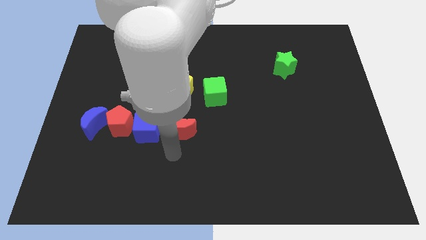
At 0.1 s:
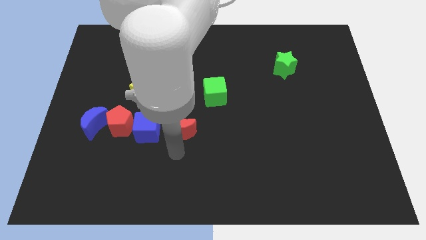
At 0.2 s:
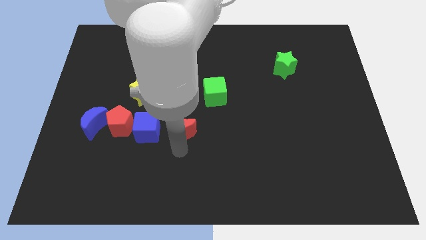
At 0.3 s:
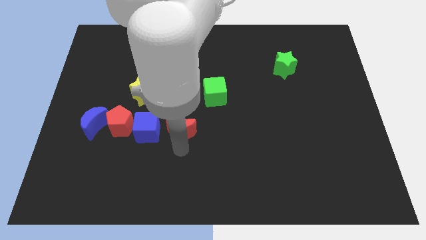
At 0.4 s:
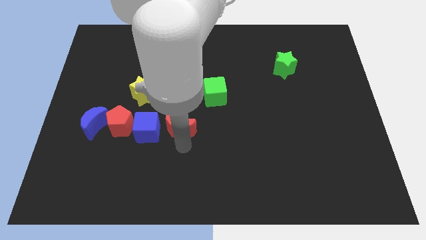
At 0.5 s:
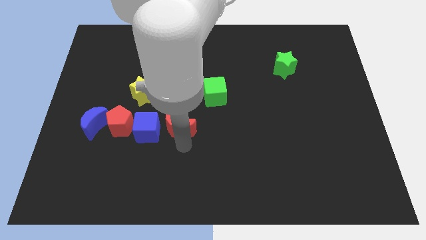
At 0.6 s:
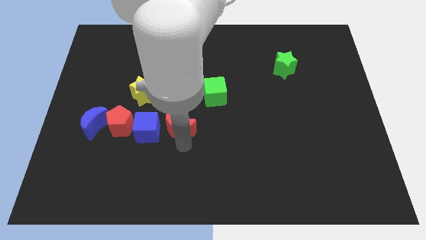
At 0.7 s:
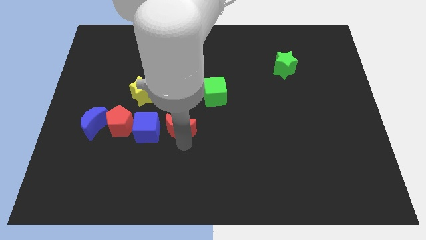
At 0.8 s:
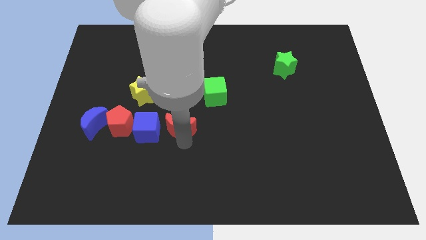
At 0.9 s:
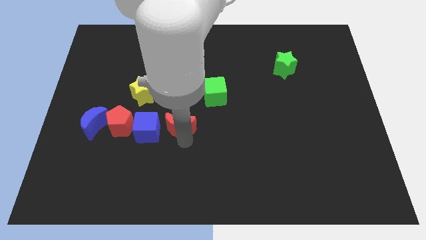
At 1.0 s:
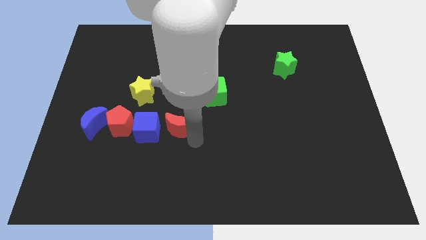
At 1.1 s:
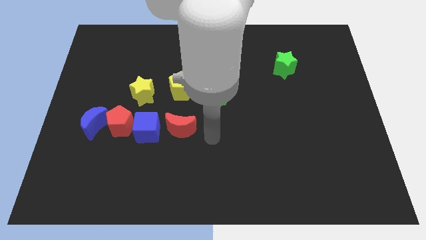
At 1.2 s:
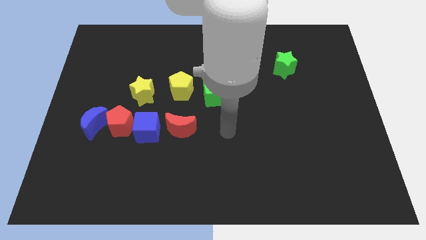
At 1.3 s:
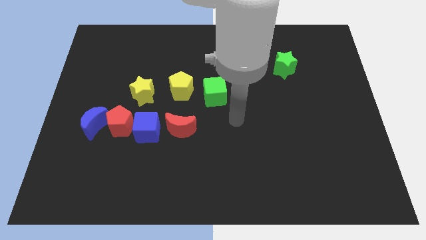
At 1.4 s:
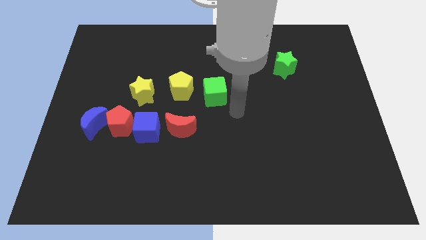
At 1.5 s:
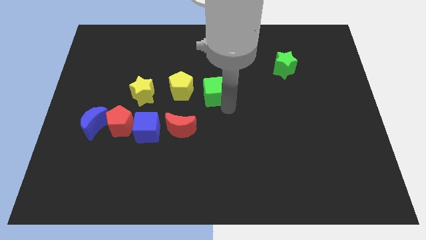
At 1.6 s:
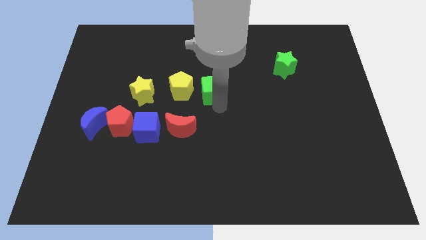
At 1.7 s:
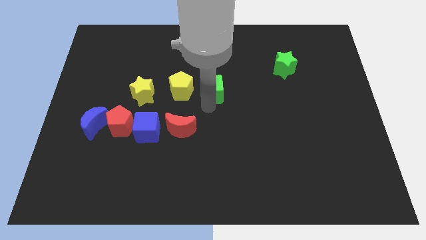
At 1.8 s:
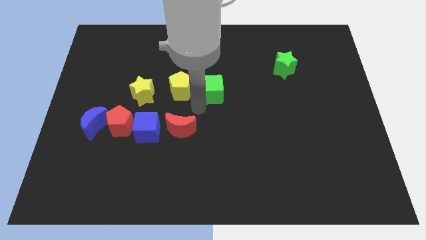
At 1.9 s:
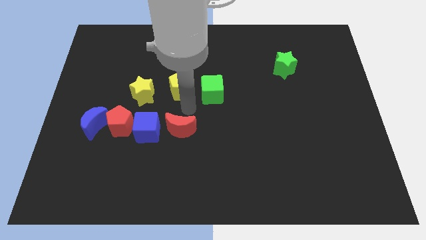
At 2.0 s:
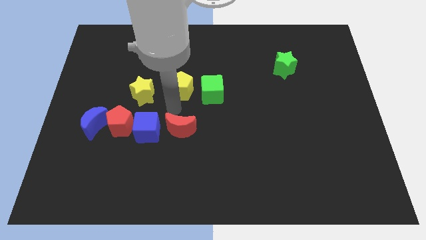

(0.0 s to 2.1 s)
move your arm away from the red moon

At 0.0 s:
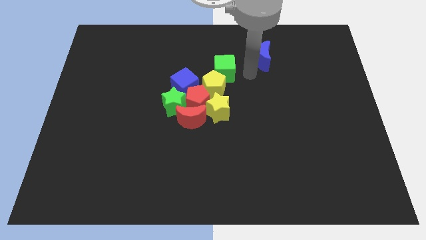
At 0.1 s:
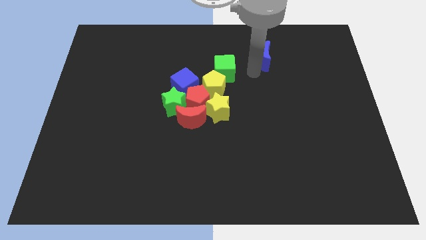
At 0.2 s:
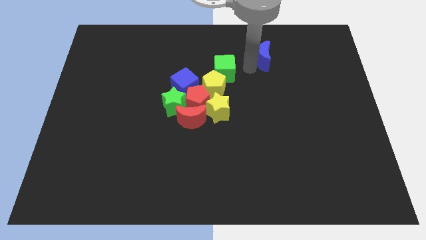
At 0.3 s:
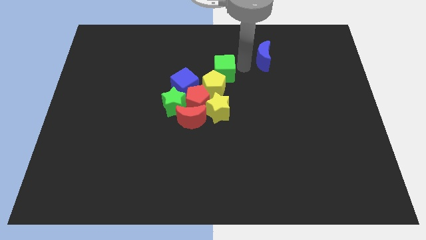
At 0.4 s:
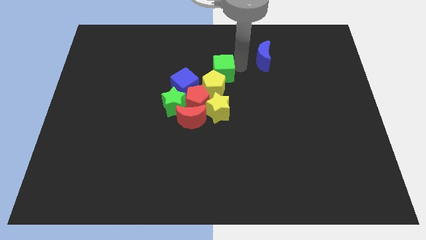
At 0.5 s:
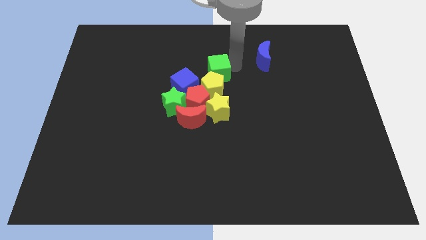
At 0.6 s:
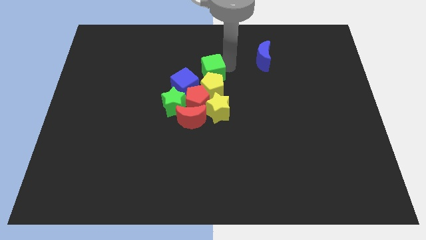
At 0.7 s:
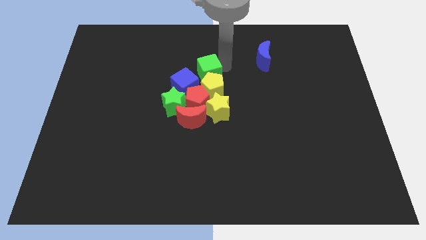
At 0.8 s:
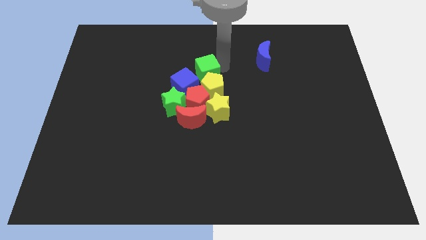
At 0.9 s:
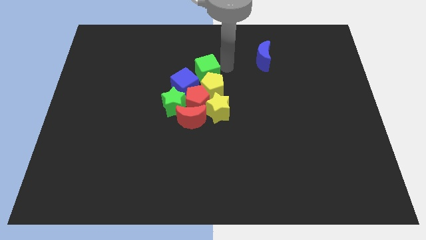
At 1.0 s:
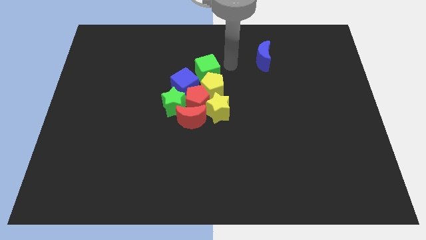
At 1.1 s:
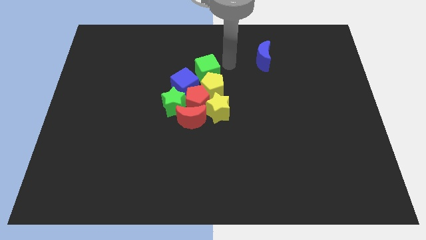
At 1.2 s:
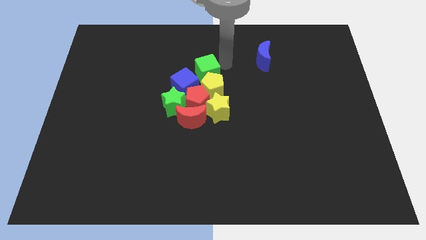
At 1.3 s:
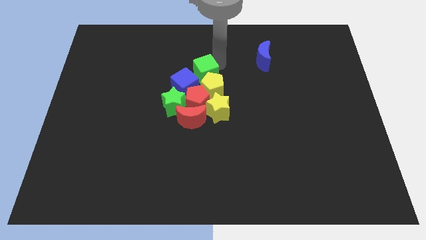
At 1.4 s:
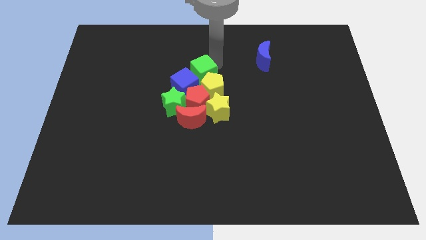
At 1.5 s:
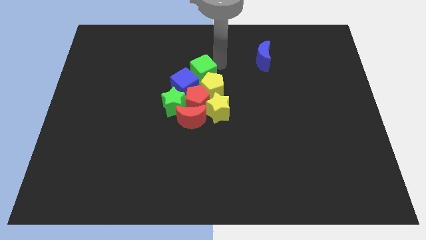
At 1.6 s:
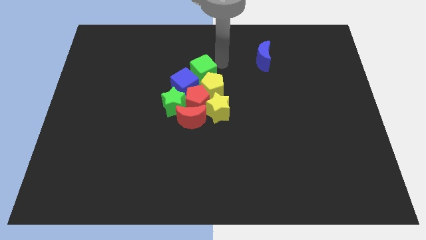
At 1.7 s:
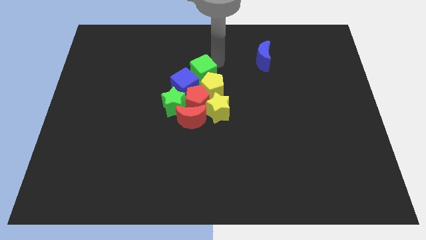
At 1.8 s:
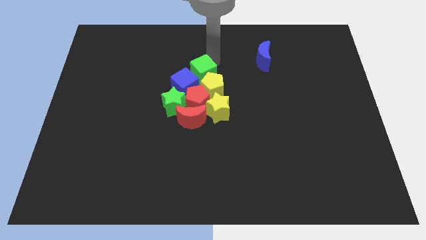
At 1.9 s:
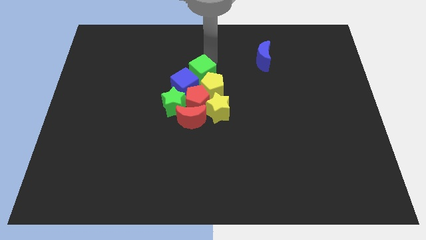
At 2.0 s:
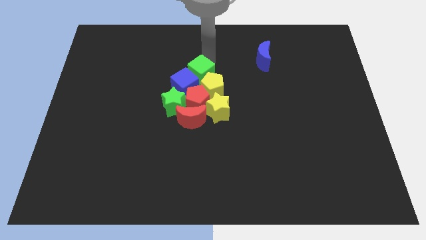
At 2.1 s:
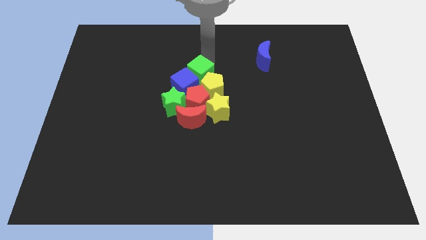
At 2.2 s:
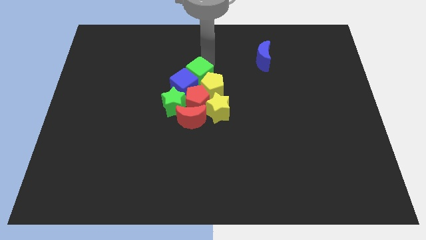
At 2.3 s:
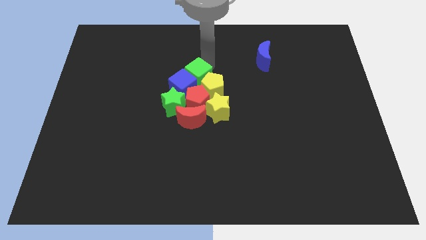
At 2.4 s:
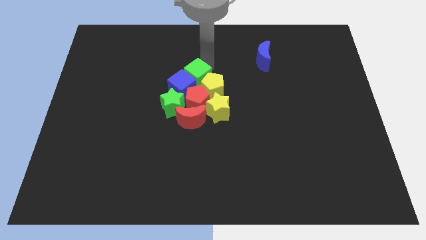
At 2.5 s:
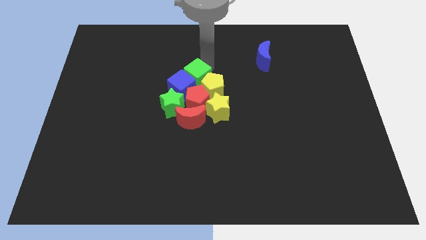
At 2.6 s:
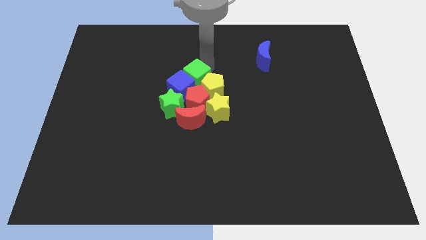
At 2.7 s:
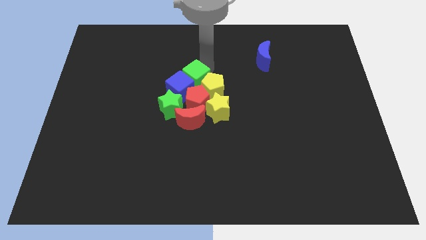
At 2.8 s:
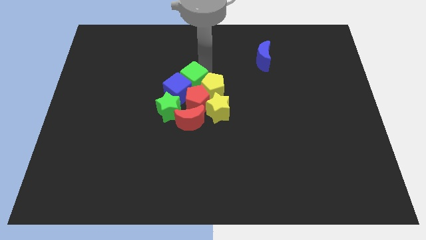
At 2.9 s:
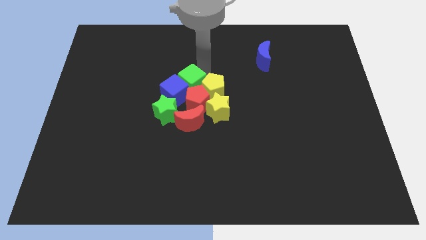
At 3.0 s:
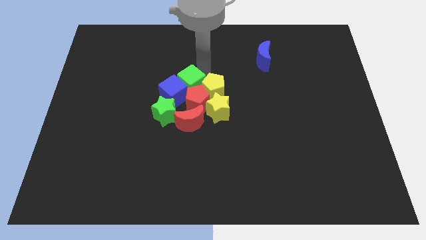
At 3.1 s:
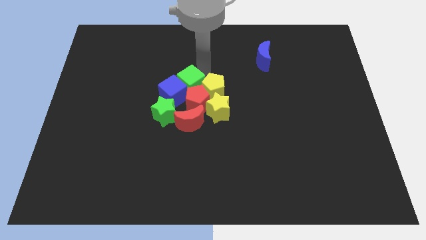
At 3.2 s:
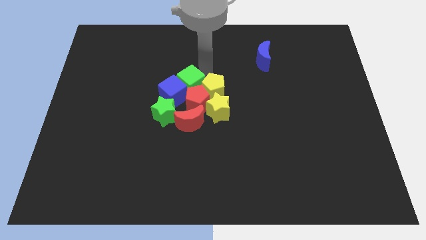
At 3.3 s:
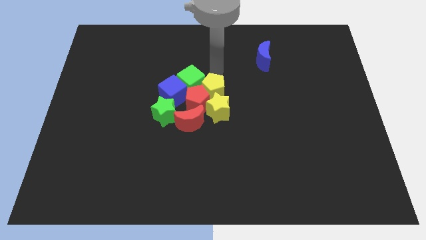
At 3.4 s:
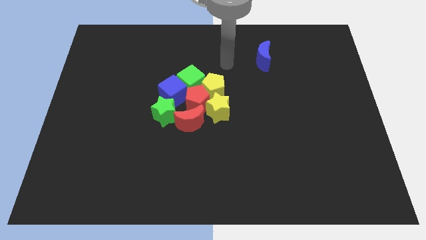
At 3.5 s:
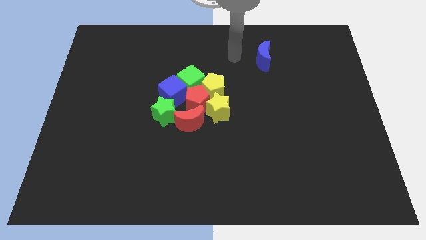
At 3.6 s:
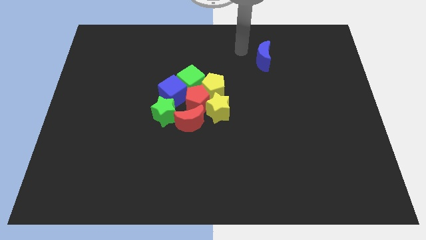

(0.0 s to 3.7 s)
add the green cube to the group of blocks except blue moon

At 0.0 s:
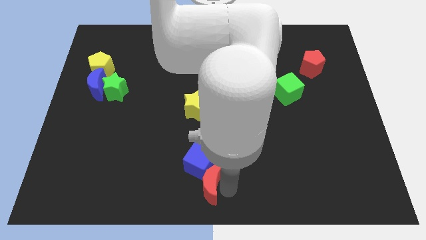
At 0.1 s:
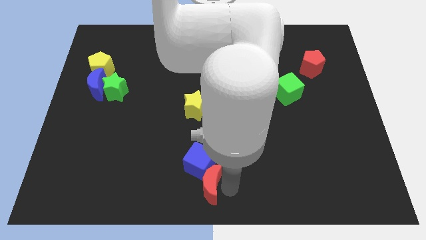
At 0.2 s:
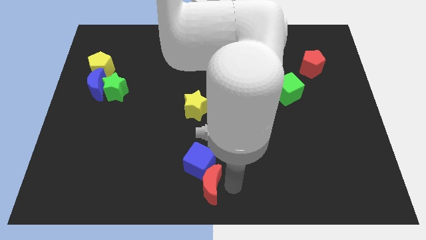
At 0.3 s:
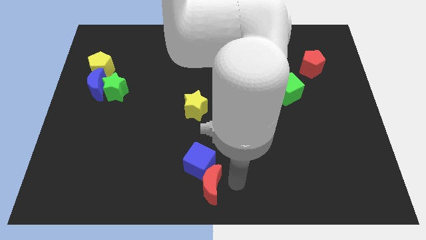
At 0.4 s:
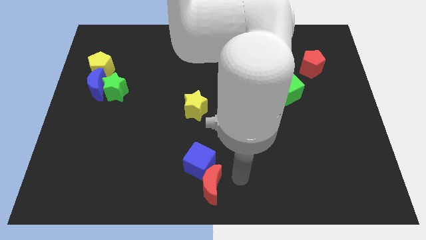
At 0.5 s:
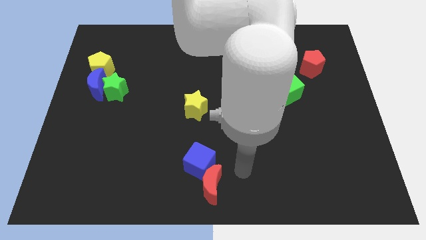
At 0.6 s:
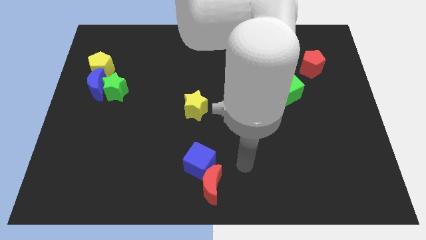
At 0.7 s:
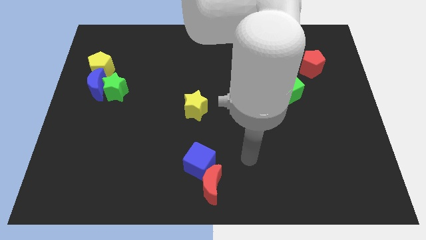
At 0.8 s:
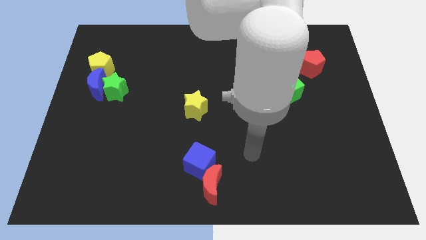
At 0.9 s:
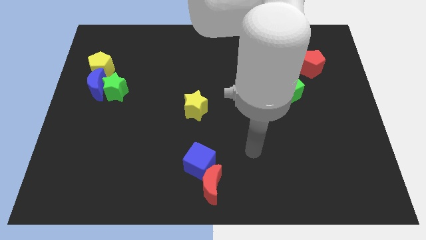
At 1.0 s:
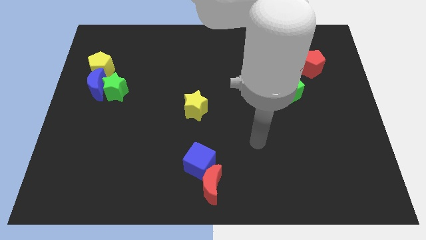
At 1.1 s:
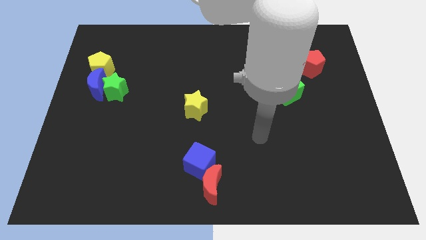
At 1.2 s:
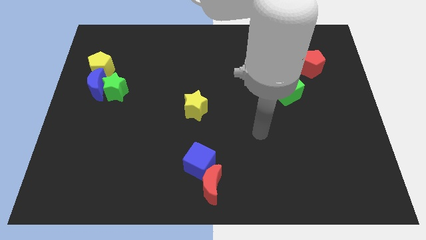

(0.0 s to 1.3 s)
move your arm away from red moon

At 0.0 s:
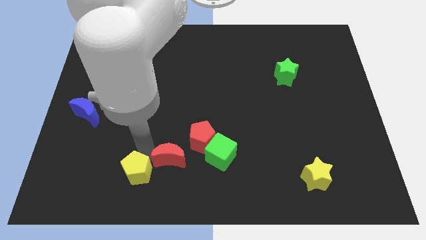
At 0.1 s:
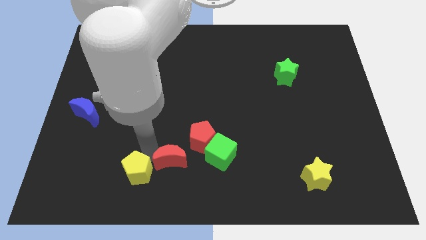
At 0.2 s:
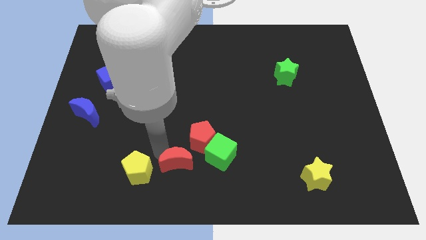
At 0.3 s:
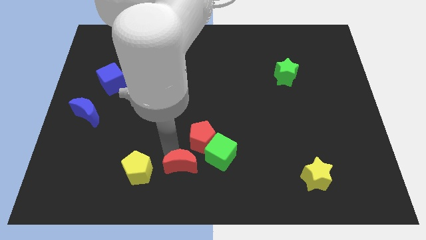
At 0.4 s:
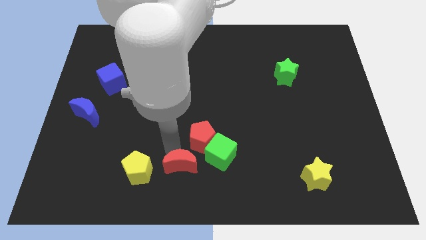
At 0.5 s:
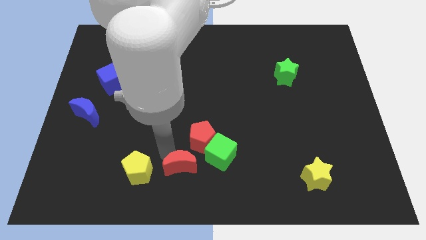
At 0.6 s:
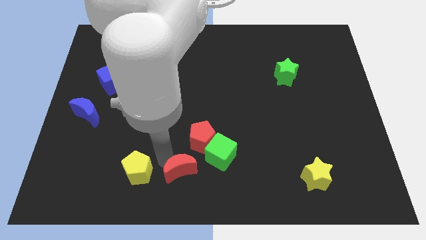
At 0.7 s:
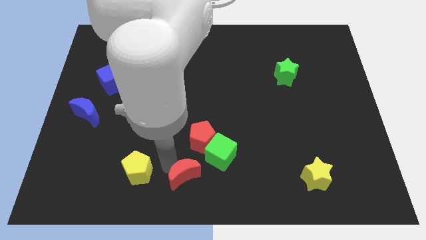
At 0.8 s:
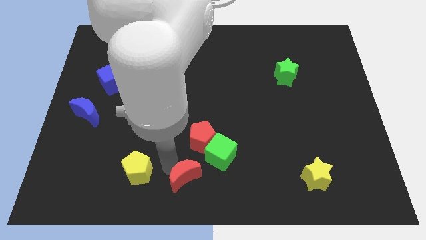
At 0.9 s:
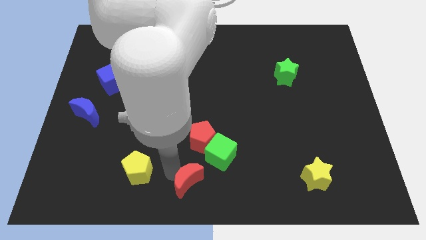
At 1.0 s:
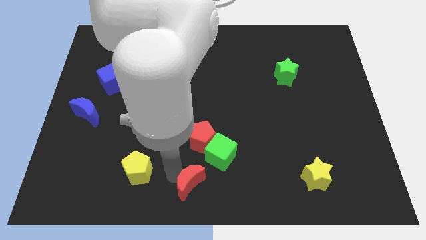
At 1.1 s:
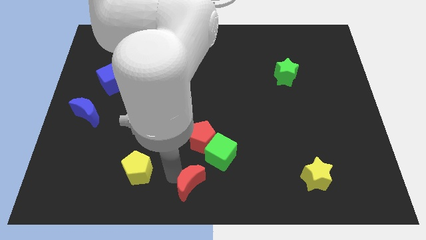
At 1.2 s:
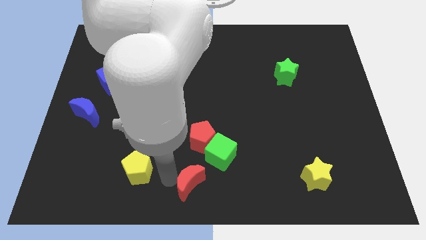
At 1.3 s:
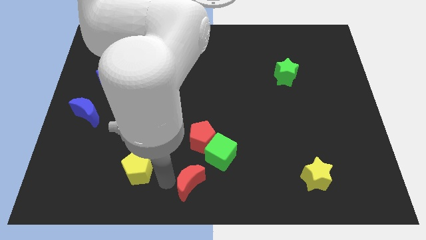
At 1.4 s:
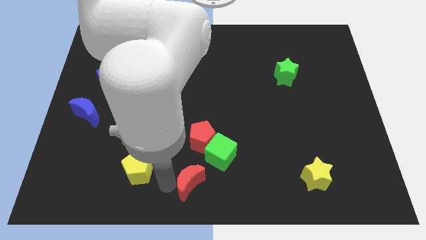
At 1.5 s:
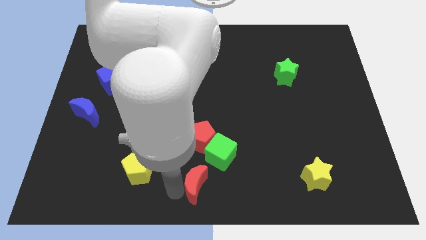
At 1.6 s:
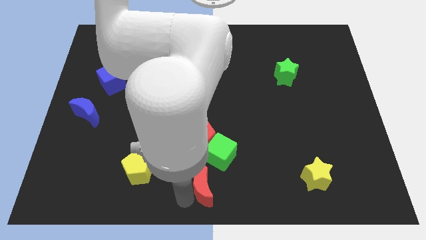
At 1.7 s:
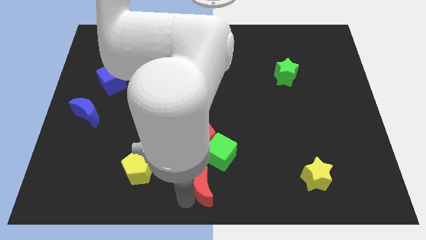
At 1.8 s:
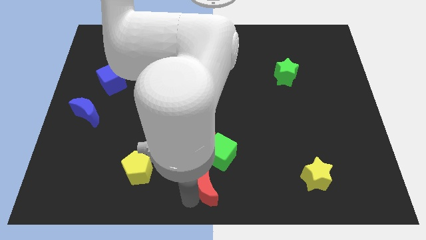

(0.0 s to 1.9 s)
move the red crescent to the bottom right side of the green cube
